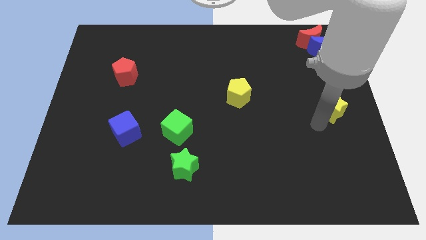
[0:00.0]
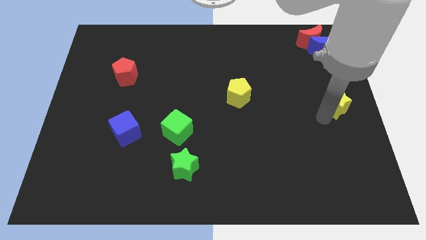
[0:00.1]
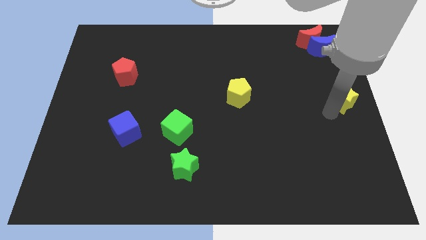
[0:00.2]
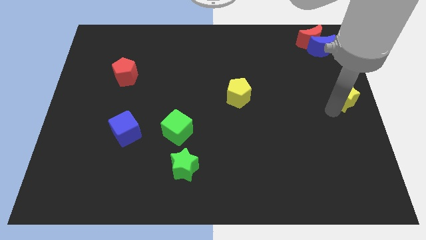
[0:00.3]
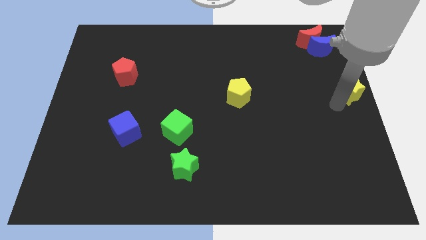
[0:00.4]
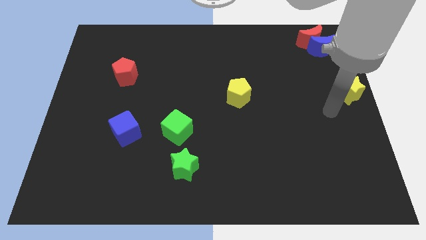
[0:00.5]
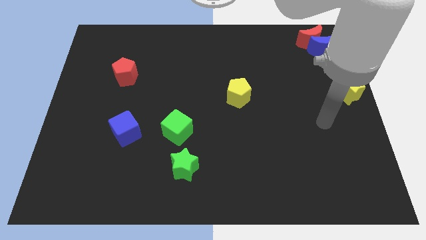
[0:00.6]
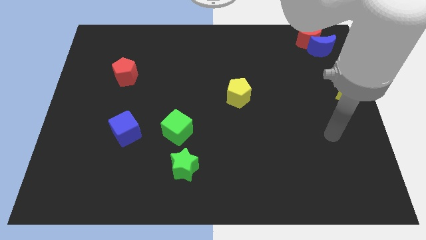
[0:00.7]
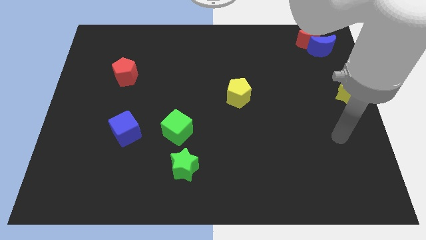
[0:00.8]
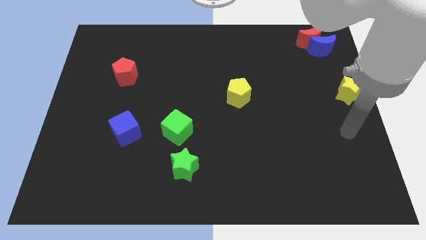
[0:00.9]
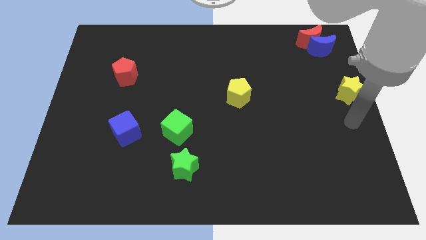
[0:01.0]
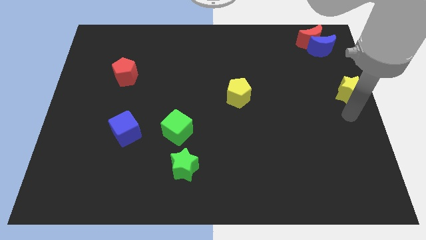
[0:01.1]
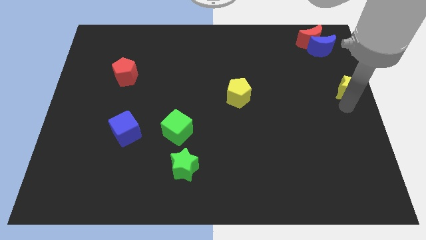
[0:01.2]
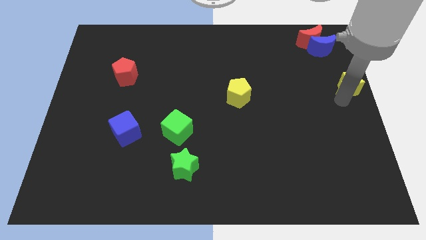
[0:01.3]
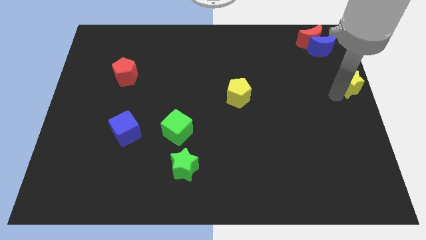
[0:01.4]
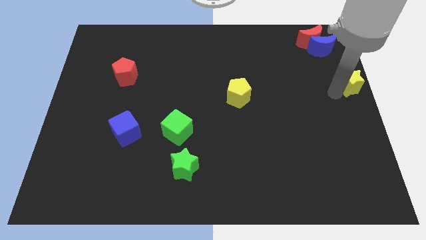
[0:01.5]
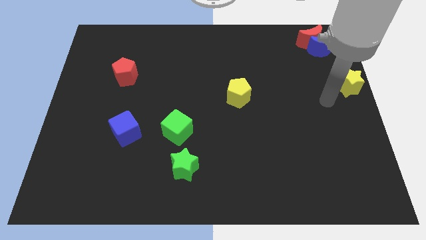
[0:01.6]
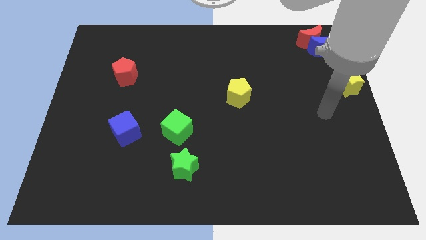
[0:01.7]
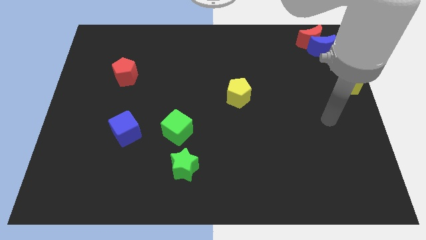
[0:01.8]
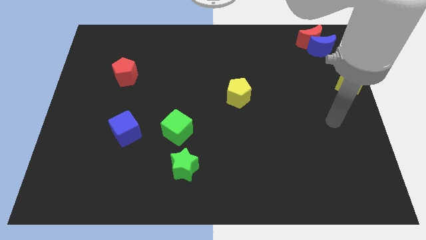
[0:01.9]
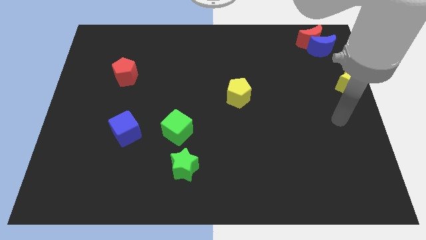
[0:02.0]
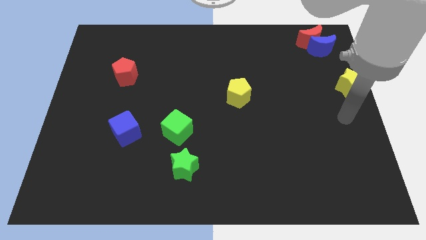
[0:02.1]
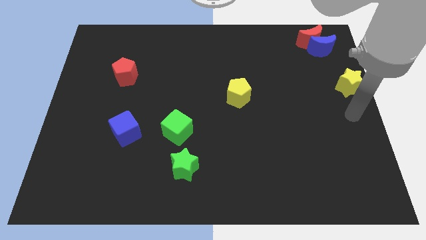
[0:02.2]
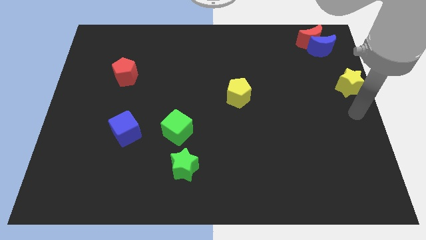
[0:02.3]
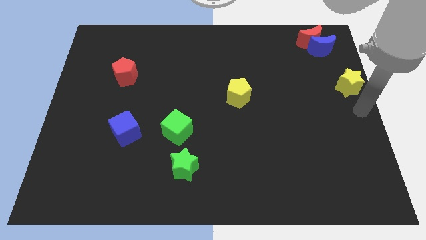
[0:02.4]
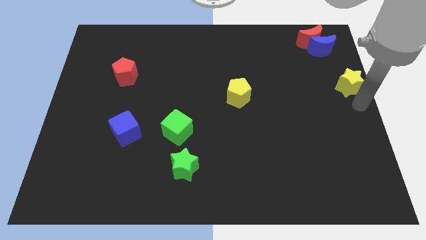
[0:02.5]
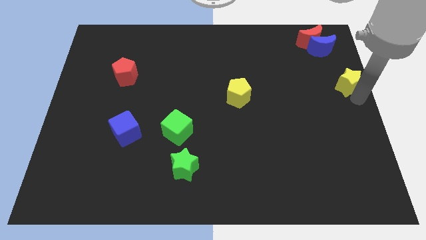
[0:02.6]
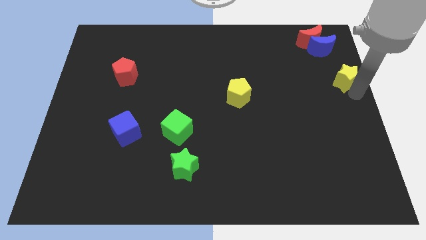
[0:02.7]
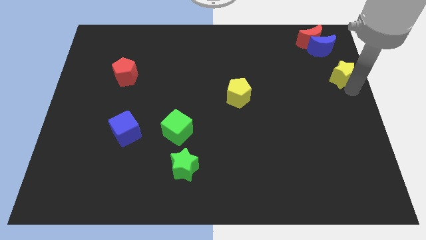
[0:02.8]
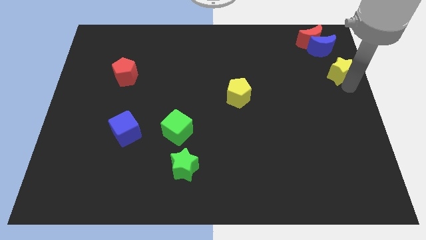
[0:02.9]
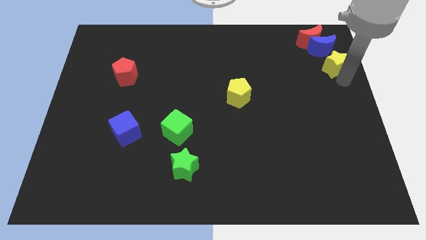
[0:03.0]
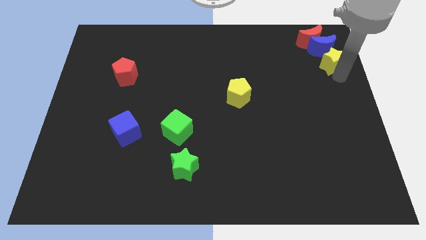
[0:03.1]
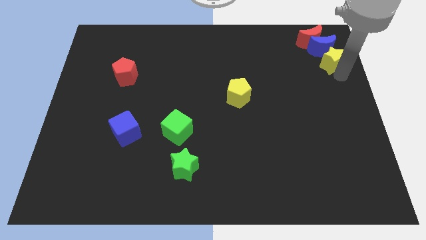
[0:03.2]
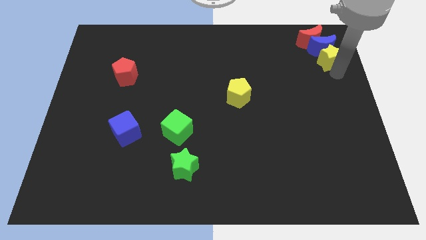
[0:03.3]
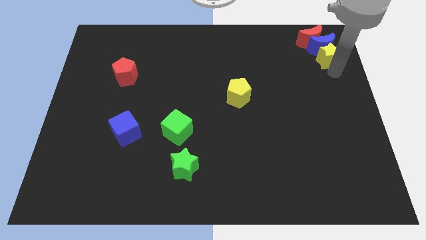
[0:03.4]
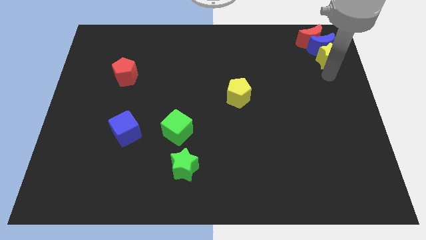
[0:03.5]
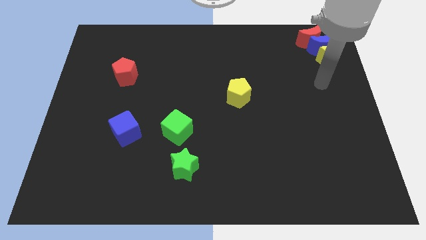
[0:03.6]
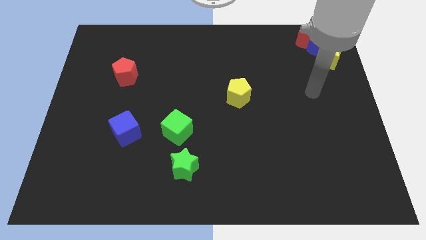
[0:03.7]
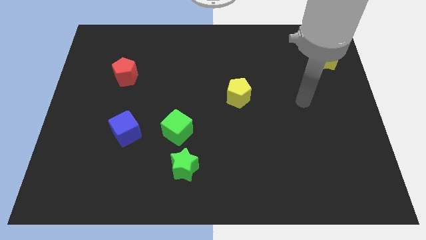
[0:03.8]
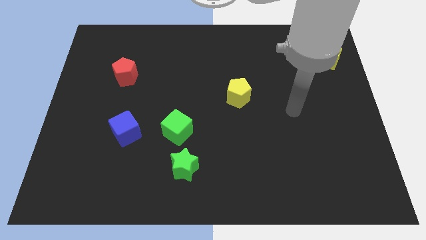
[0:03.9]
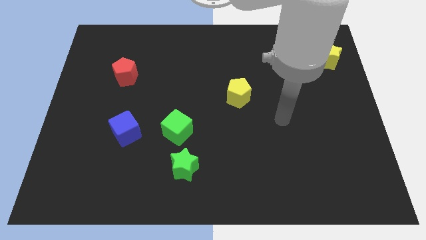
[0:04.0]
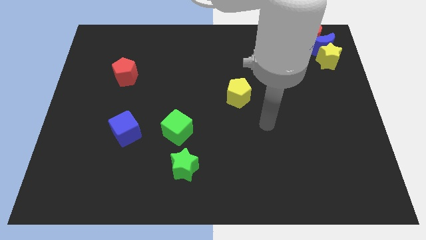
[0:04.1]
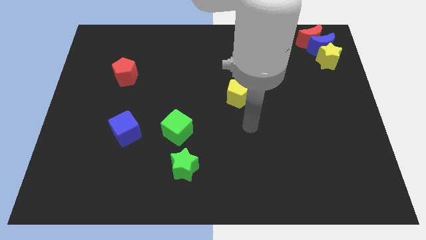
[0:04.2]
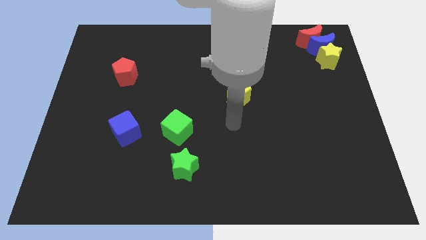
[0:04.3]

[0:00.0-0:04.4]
move the yellow star below the blue crescent

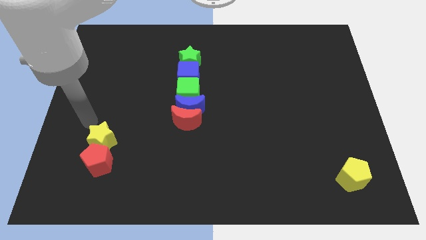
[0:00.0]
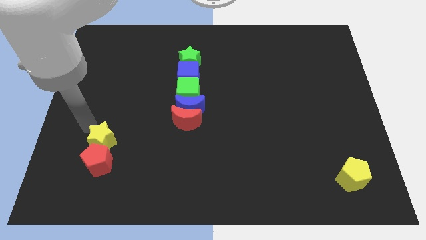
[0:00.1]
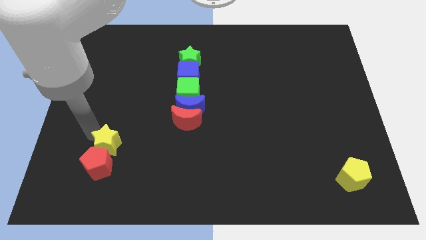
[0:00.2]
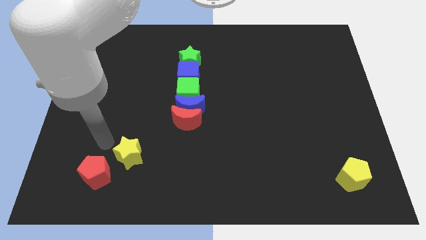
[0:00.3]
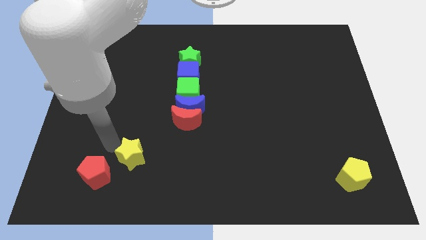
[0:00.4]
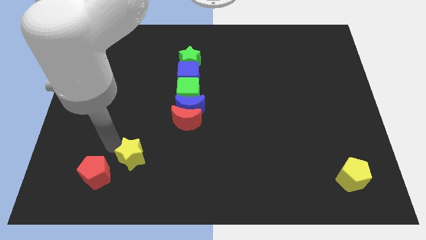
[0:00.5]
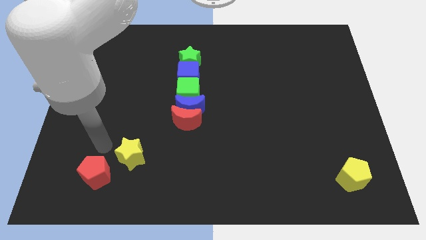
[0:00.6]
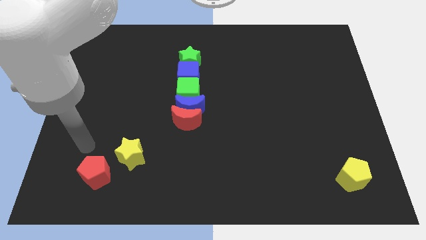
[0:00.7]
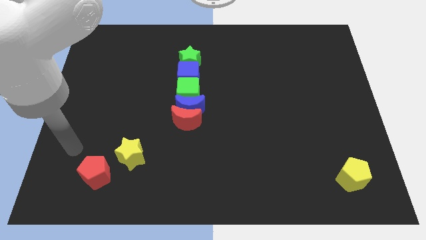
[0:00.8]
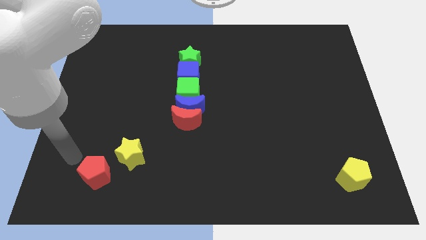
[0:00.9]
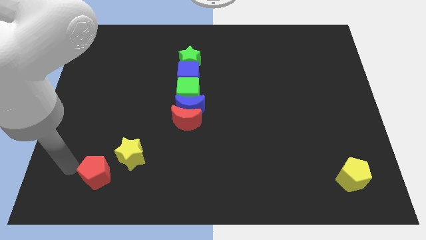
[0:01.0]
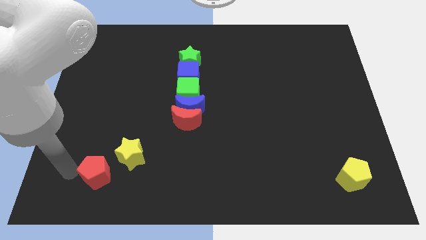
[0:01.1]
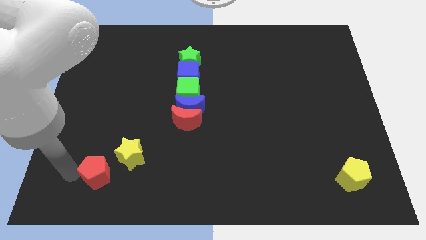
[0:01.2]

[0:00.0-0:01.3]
push the yellow star slightly towards the right of the red pentagon

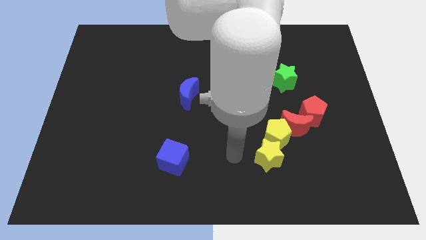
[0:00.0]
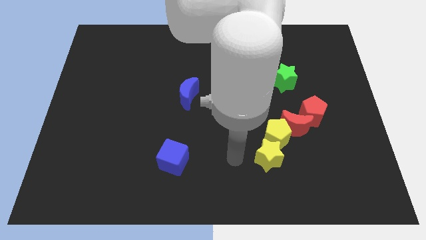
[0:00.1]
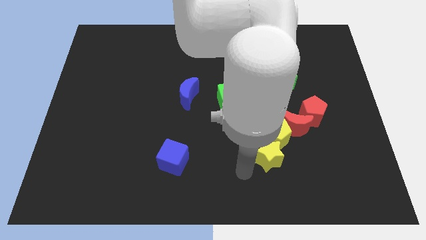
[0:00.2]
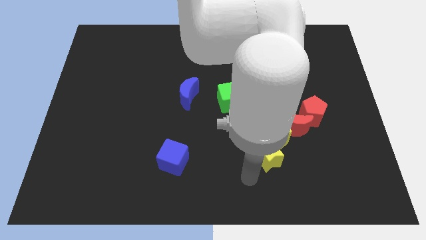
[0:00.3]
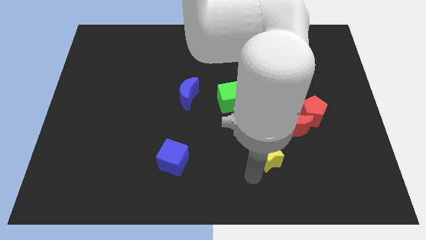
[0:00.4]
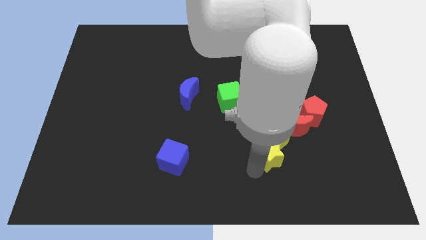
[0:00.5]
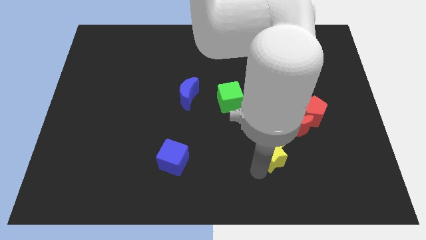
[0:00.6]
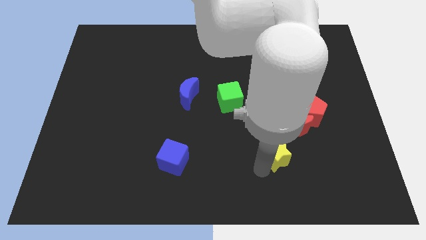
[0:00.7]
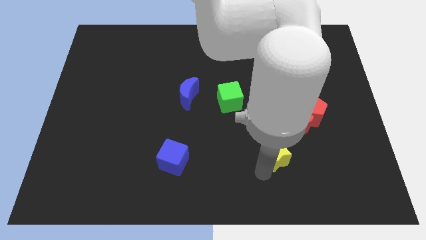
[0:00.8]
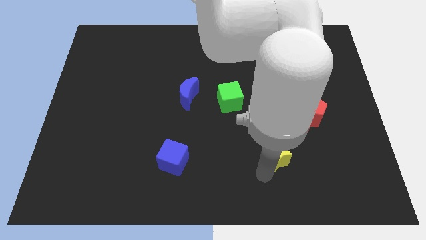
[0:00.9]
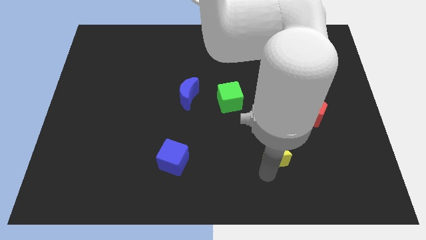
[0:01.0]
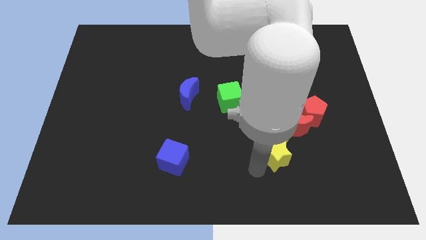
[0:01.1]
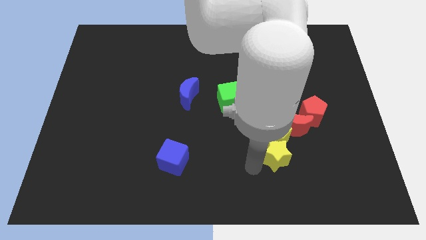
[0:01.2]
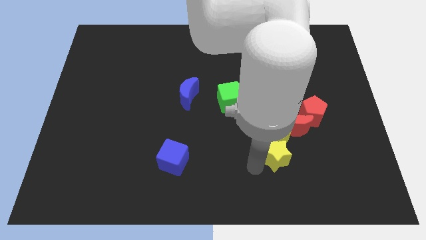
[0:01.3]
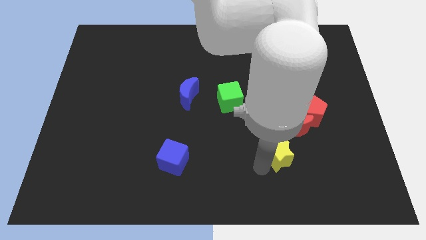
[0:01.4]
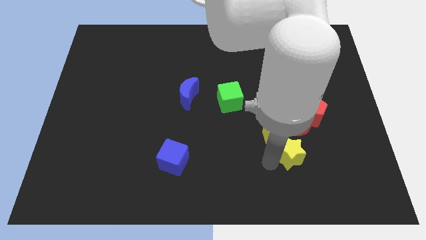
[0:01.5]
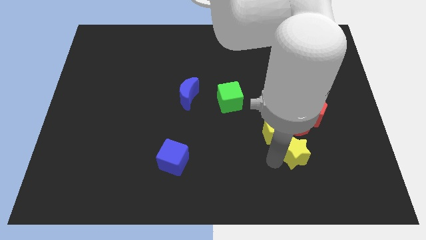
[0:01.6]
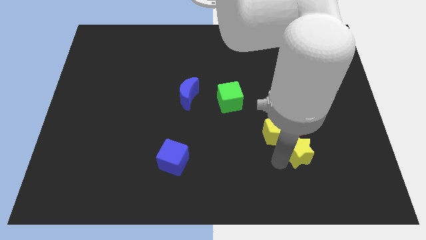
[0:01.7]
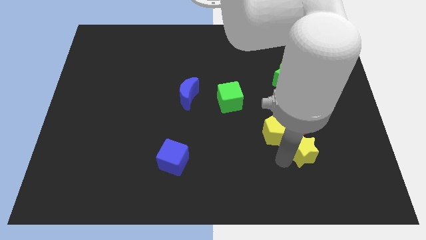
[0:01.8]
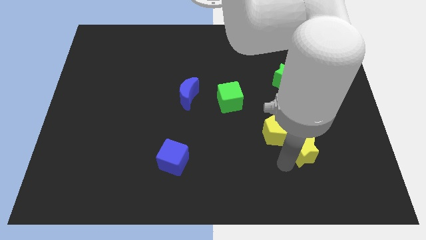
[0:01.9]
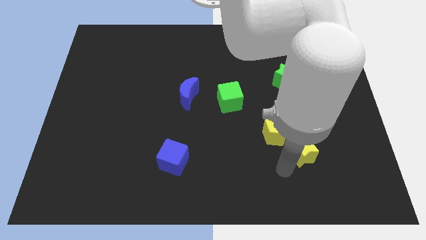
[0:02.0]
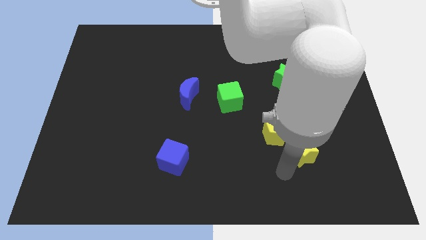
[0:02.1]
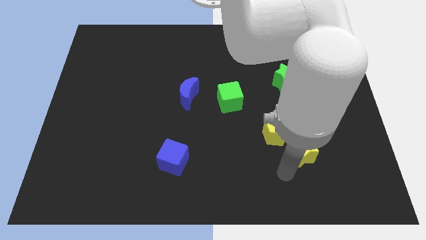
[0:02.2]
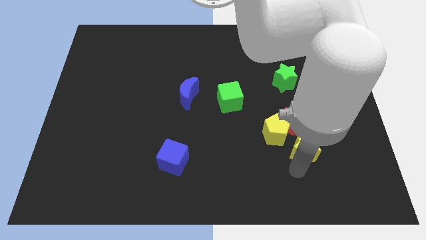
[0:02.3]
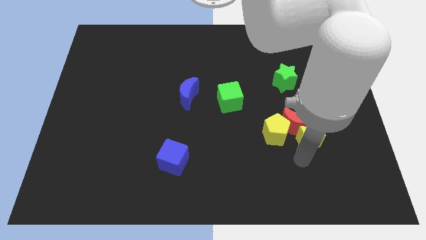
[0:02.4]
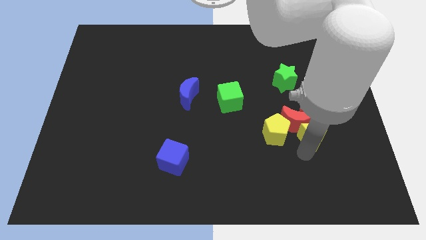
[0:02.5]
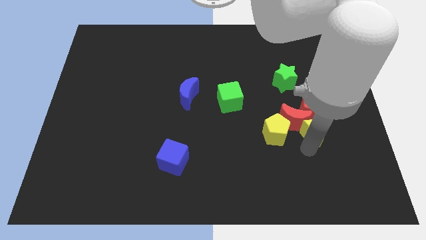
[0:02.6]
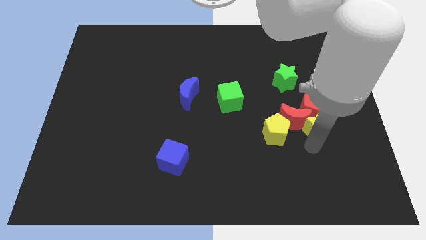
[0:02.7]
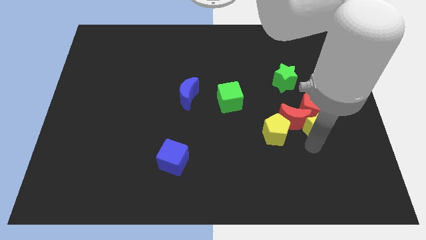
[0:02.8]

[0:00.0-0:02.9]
move the yellow star to the bottom of the red pentagon

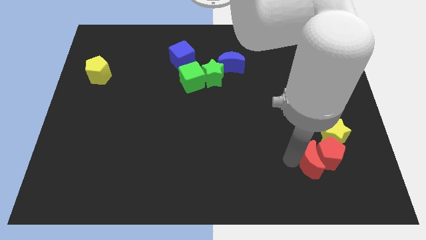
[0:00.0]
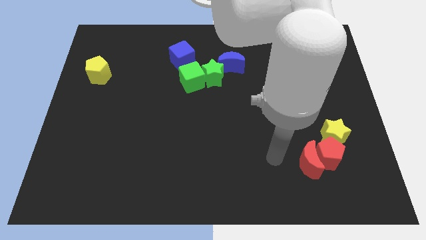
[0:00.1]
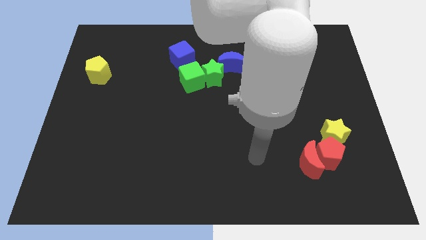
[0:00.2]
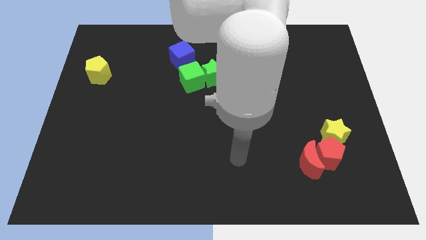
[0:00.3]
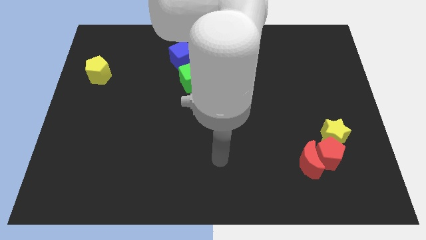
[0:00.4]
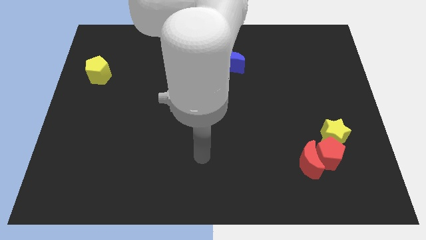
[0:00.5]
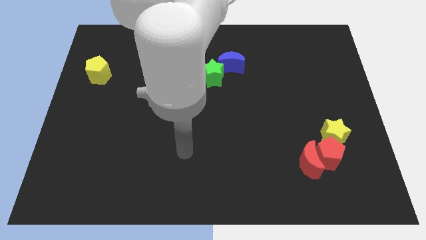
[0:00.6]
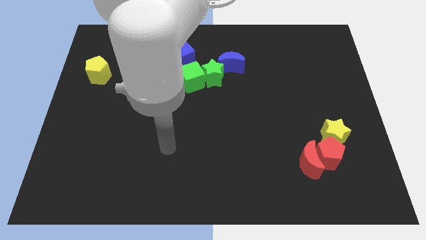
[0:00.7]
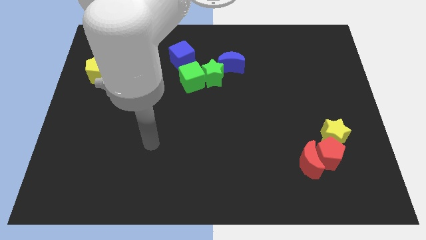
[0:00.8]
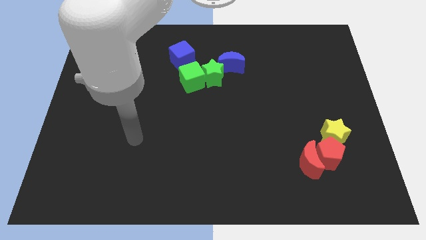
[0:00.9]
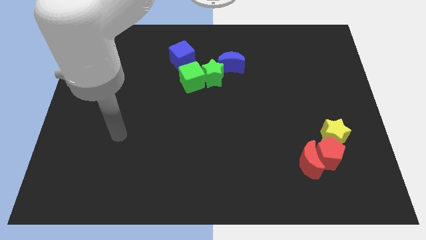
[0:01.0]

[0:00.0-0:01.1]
move your hand away from the red crescent
